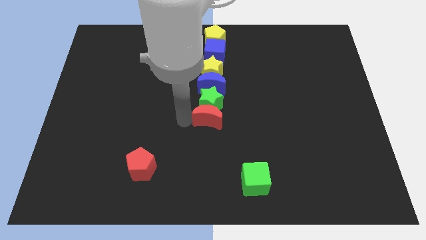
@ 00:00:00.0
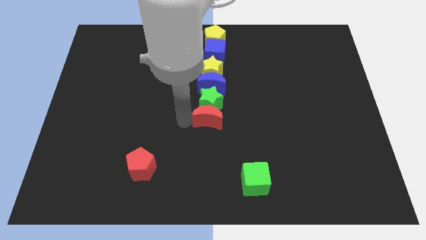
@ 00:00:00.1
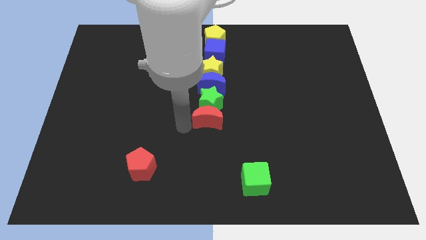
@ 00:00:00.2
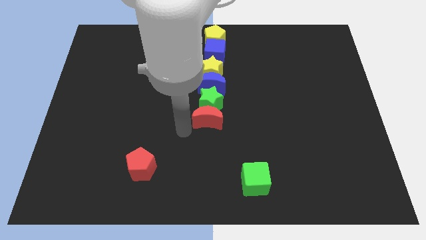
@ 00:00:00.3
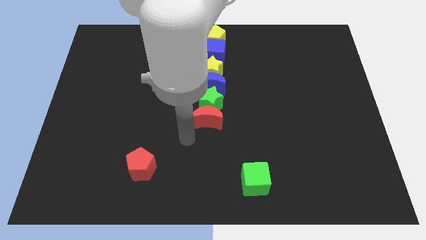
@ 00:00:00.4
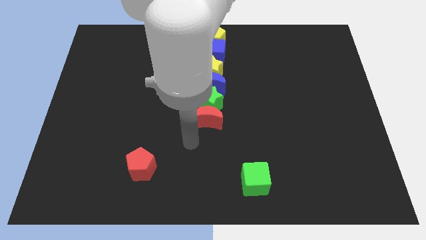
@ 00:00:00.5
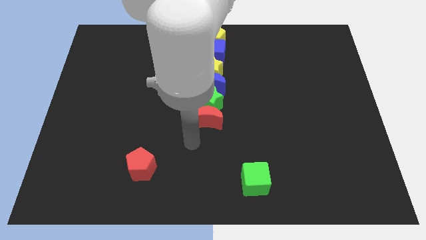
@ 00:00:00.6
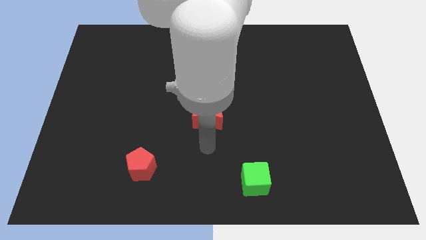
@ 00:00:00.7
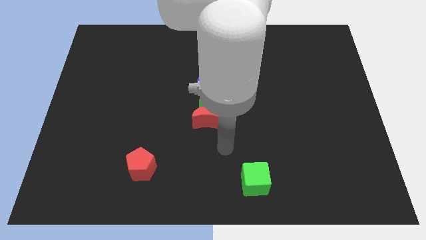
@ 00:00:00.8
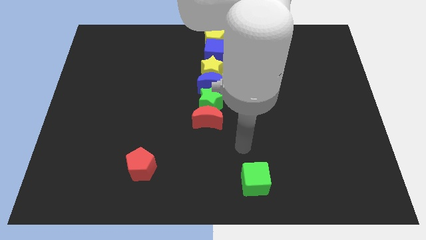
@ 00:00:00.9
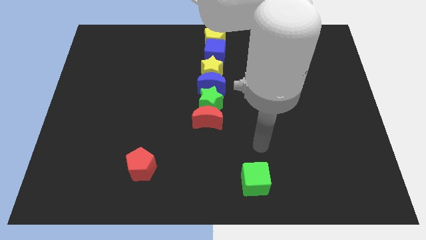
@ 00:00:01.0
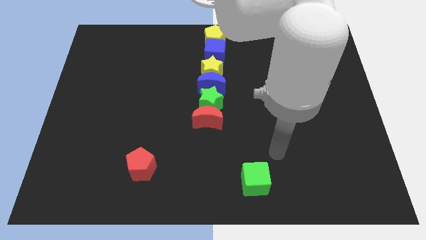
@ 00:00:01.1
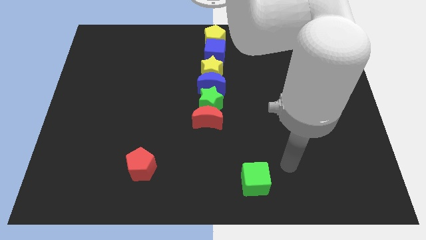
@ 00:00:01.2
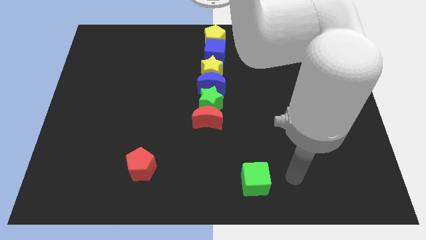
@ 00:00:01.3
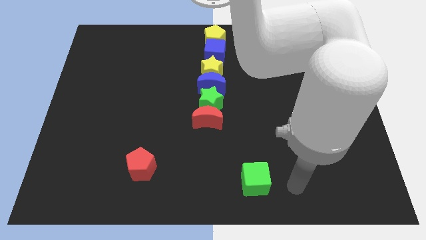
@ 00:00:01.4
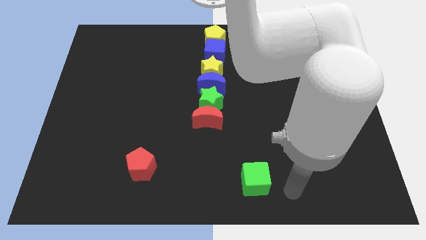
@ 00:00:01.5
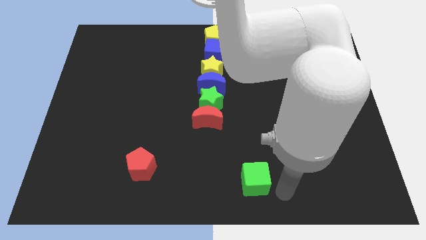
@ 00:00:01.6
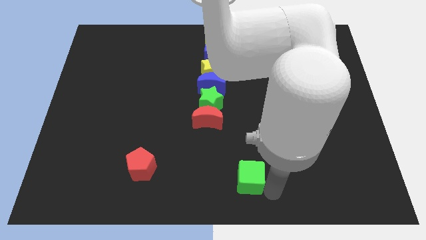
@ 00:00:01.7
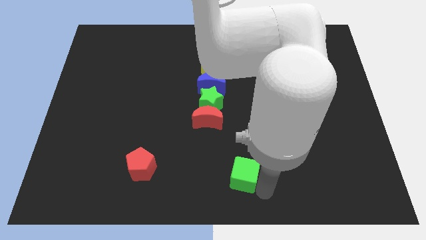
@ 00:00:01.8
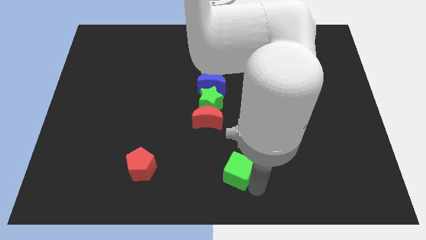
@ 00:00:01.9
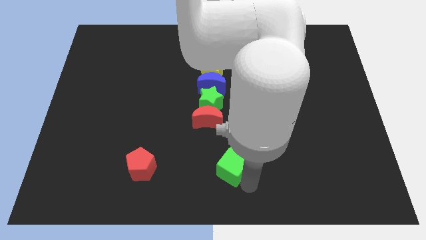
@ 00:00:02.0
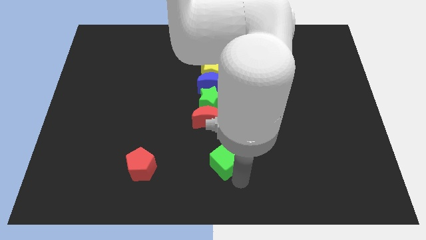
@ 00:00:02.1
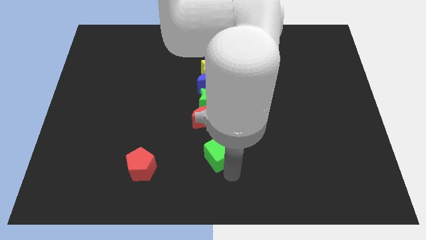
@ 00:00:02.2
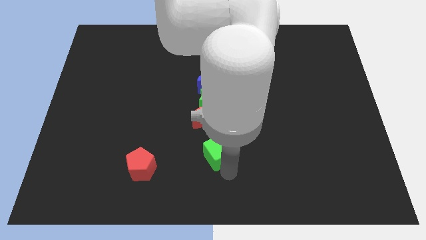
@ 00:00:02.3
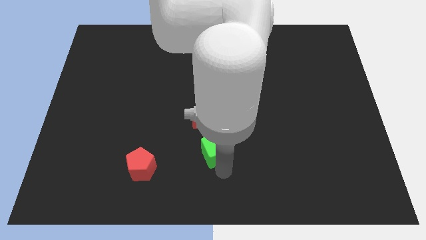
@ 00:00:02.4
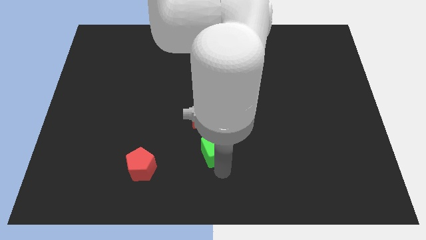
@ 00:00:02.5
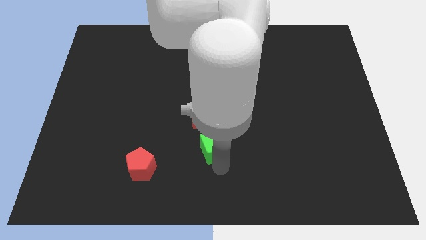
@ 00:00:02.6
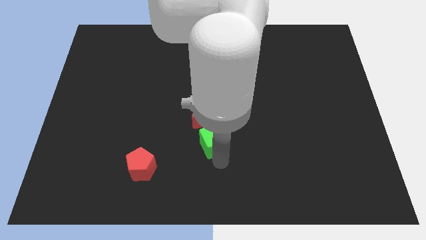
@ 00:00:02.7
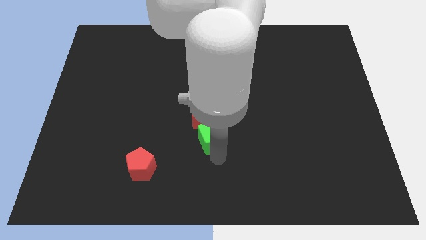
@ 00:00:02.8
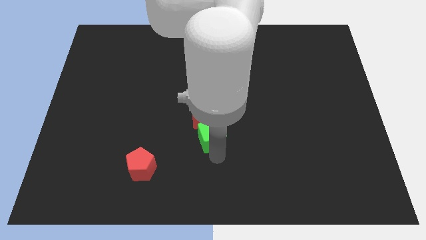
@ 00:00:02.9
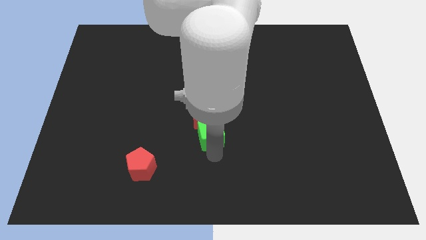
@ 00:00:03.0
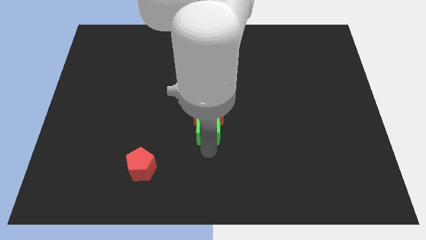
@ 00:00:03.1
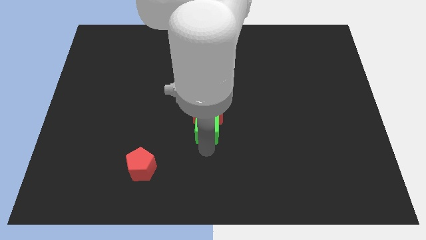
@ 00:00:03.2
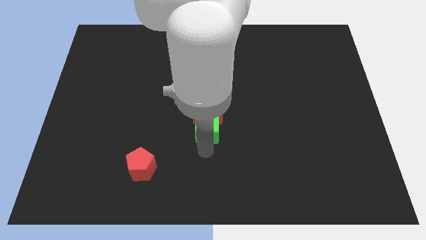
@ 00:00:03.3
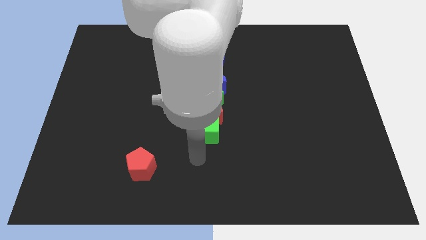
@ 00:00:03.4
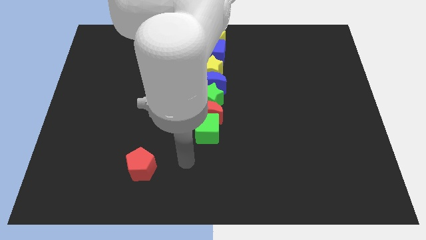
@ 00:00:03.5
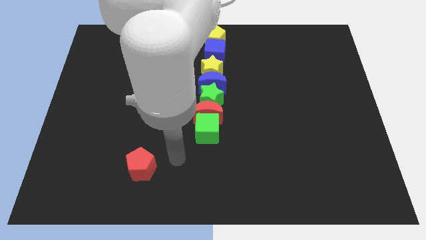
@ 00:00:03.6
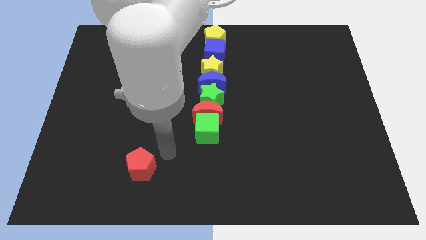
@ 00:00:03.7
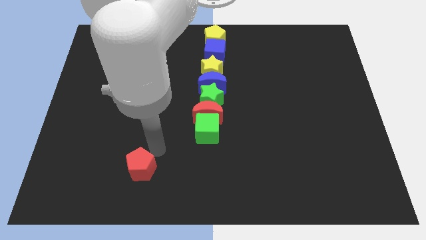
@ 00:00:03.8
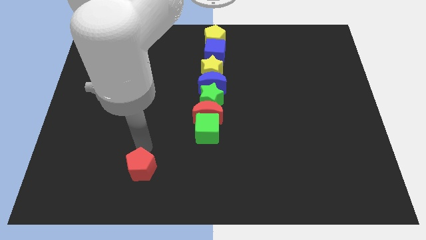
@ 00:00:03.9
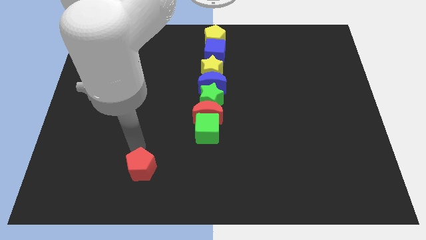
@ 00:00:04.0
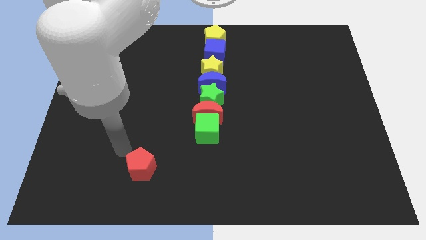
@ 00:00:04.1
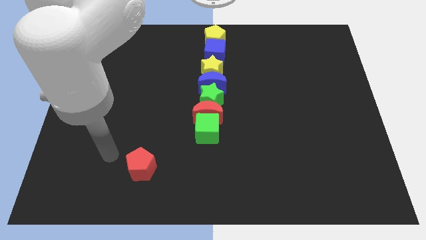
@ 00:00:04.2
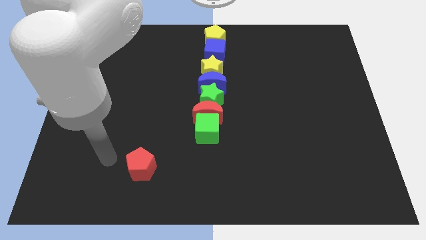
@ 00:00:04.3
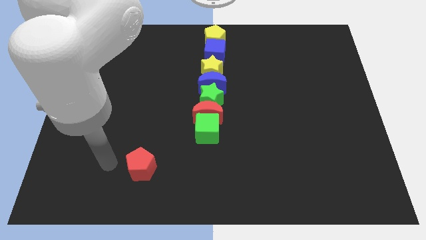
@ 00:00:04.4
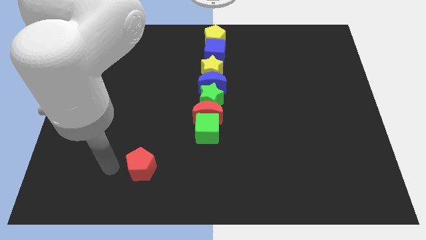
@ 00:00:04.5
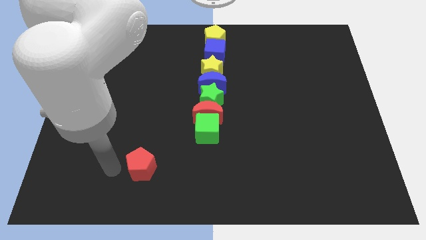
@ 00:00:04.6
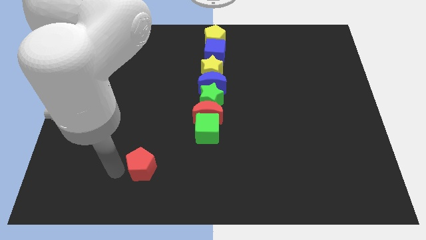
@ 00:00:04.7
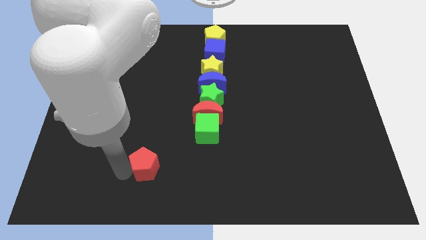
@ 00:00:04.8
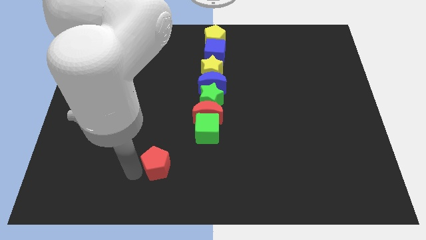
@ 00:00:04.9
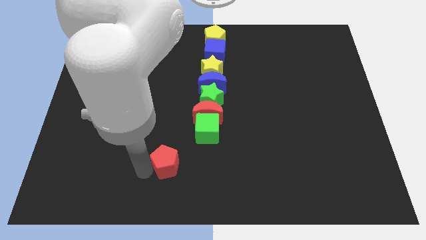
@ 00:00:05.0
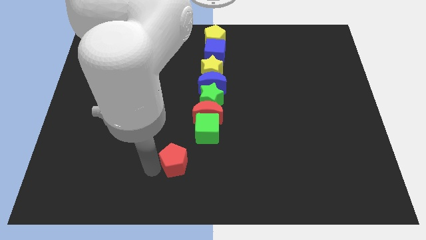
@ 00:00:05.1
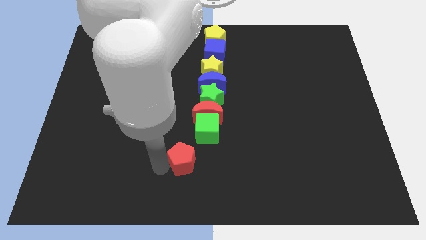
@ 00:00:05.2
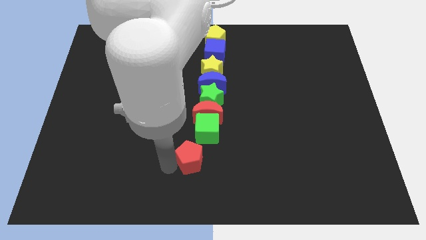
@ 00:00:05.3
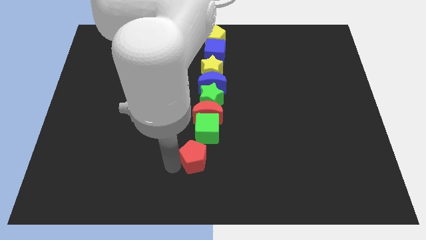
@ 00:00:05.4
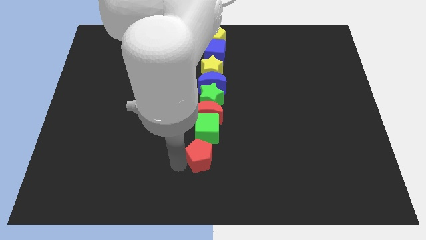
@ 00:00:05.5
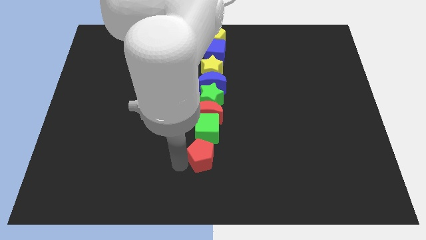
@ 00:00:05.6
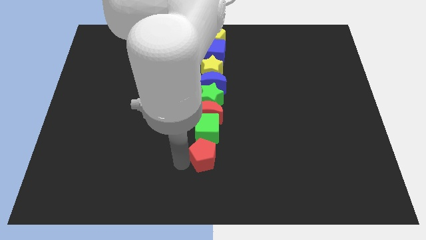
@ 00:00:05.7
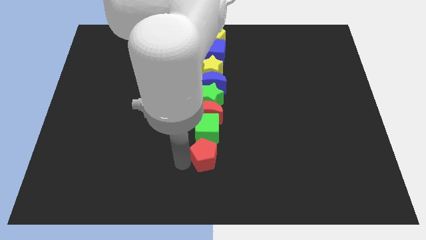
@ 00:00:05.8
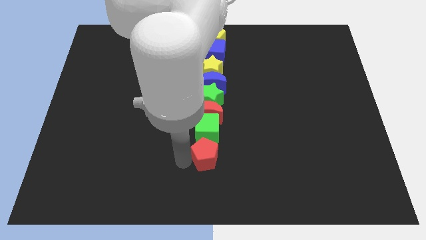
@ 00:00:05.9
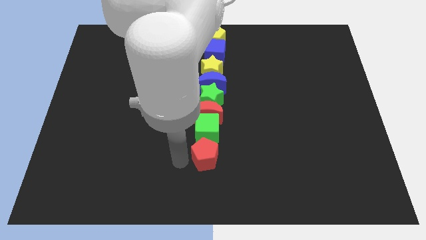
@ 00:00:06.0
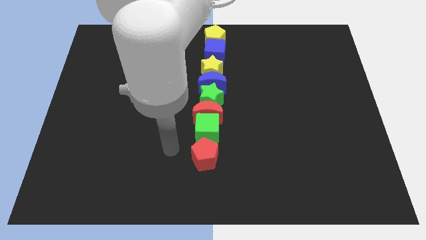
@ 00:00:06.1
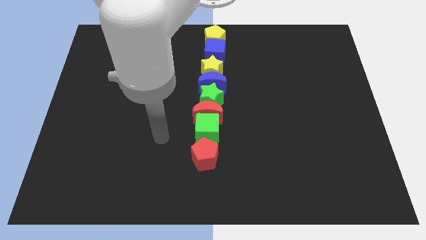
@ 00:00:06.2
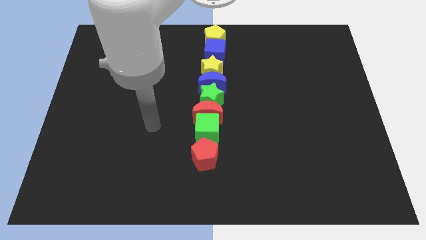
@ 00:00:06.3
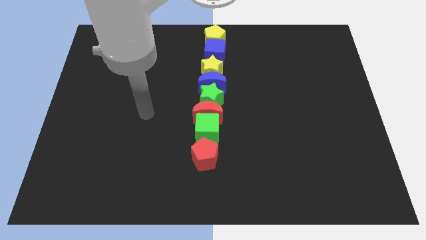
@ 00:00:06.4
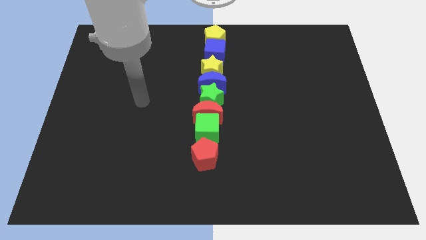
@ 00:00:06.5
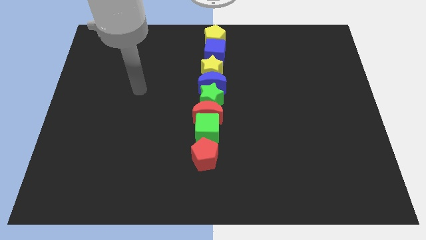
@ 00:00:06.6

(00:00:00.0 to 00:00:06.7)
move your arm away from the red pentagon

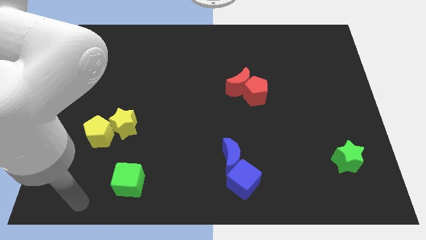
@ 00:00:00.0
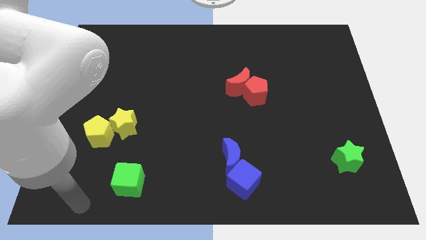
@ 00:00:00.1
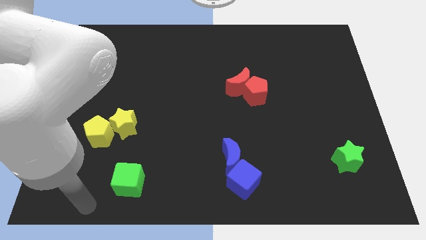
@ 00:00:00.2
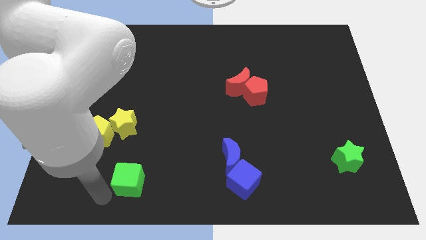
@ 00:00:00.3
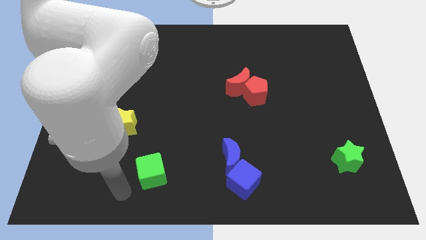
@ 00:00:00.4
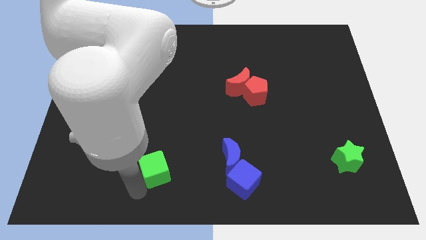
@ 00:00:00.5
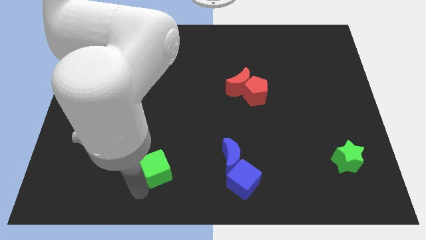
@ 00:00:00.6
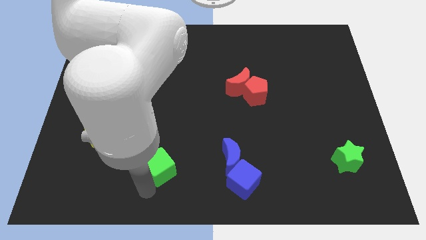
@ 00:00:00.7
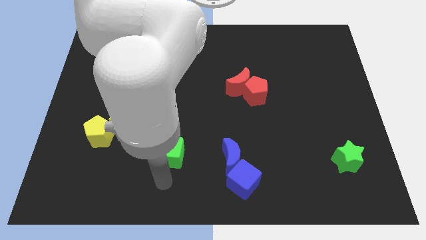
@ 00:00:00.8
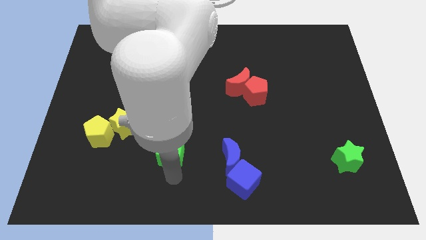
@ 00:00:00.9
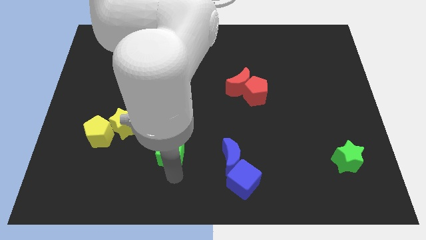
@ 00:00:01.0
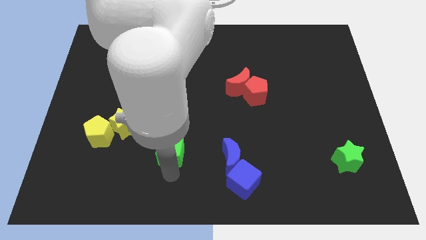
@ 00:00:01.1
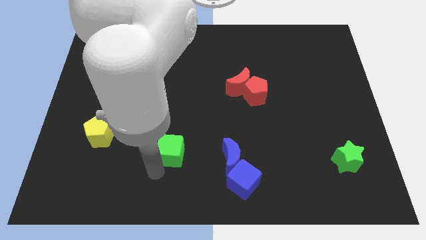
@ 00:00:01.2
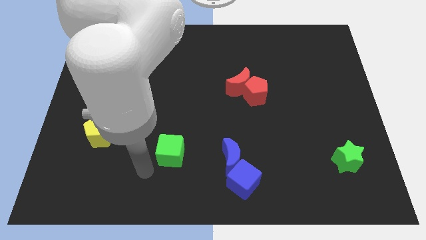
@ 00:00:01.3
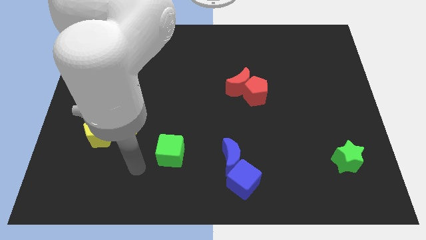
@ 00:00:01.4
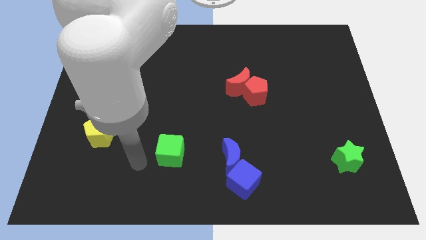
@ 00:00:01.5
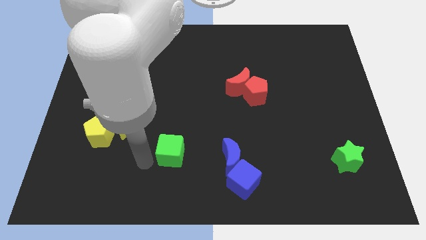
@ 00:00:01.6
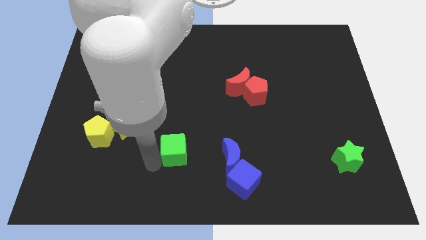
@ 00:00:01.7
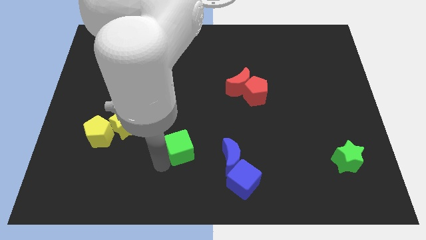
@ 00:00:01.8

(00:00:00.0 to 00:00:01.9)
move the green cube between yellow and blue blocks

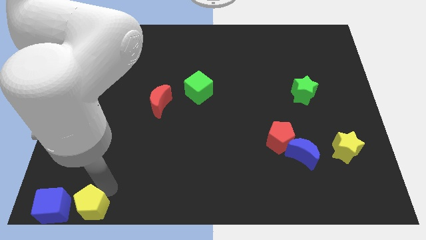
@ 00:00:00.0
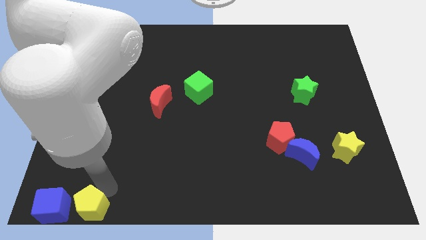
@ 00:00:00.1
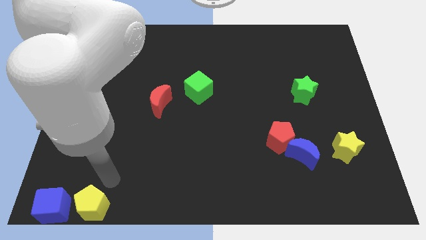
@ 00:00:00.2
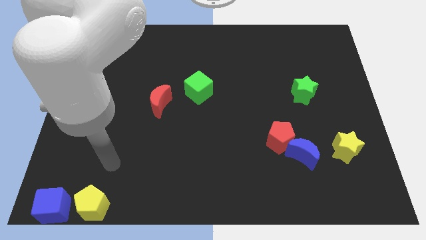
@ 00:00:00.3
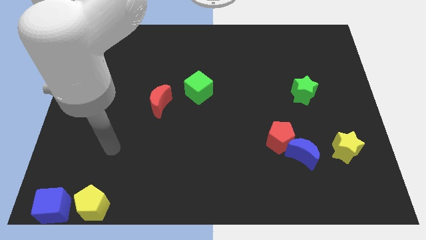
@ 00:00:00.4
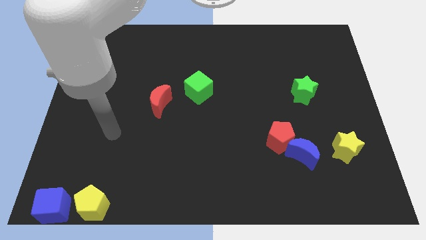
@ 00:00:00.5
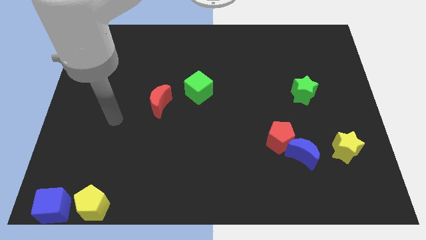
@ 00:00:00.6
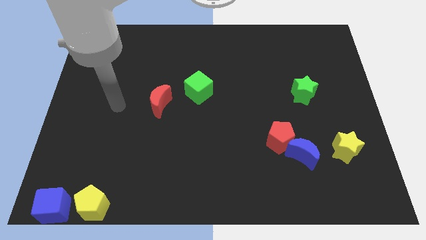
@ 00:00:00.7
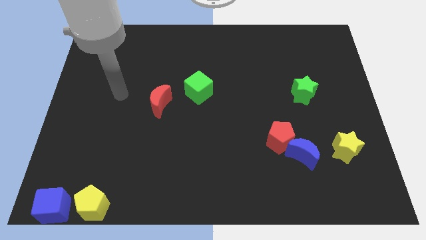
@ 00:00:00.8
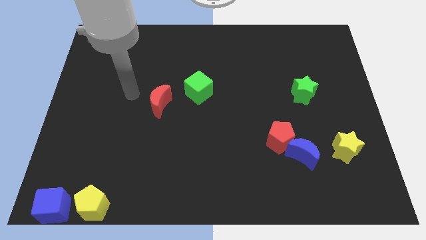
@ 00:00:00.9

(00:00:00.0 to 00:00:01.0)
move the arm away from the yellow pentagon
